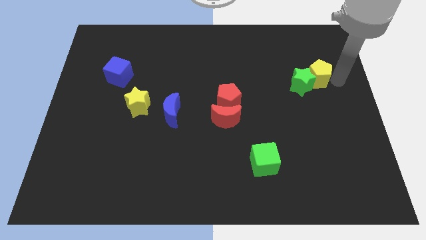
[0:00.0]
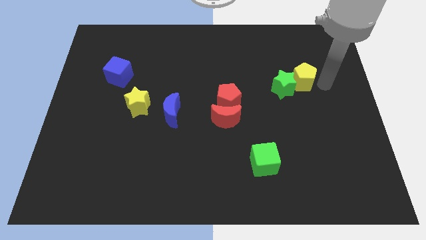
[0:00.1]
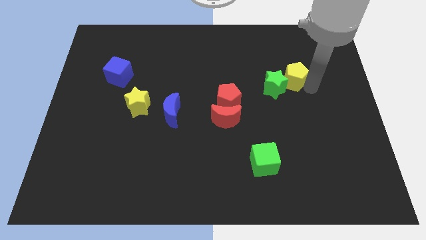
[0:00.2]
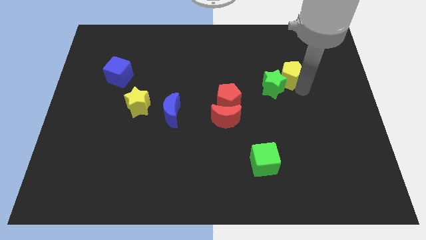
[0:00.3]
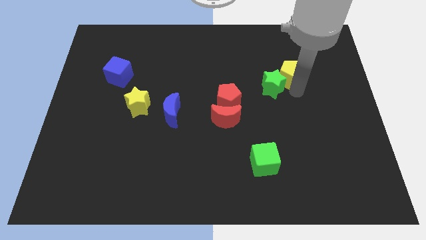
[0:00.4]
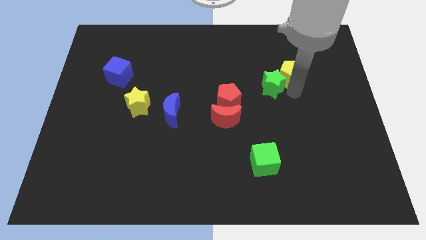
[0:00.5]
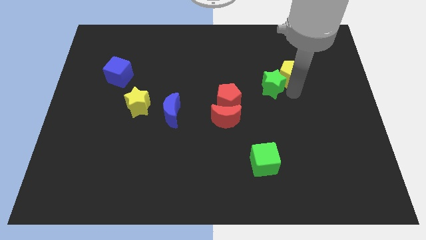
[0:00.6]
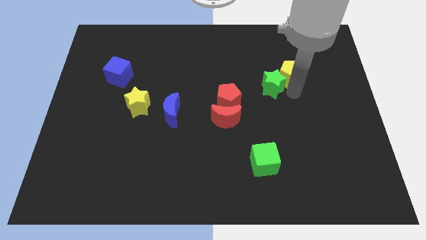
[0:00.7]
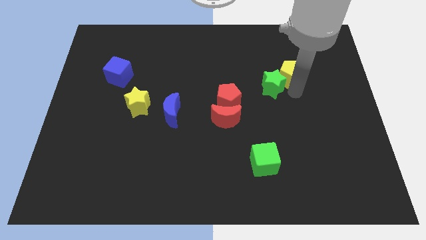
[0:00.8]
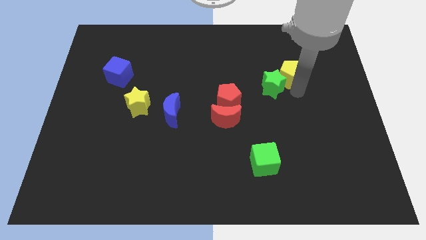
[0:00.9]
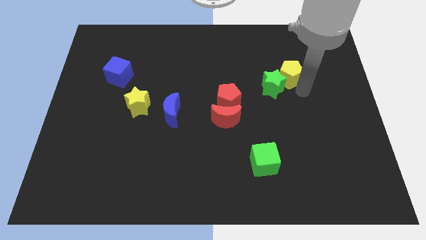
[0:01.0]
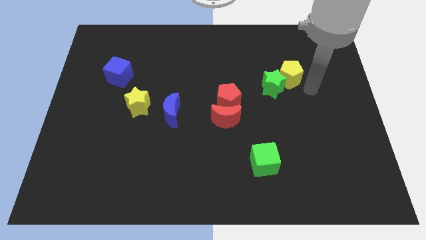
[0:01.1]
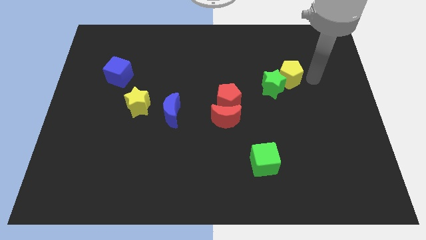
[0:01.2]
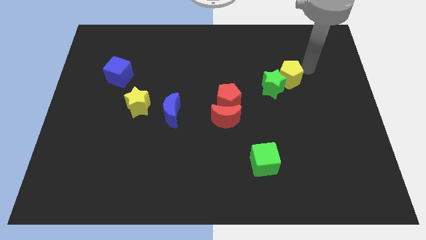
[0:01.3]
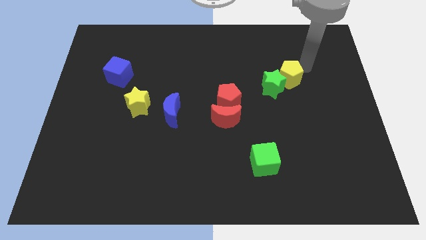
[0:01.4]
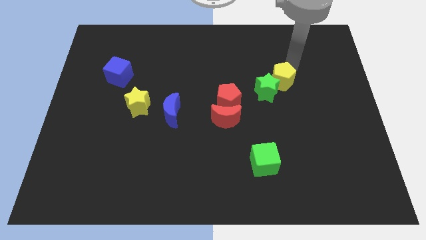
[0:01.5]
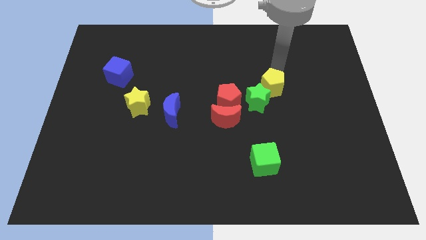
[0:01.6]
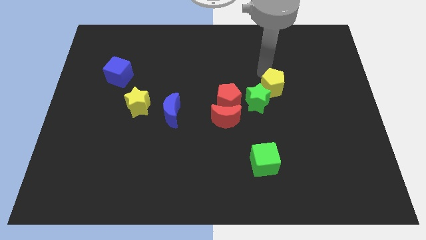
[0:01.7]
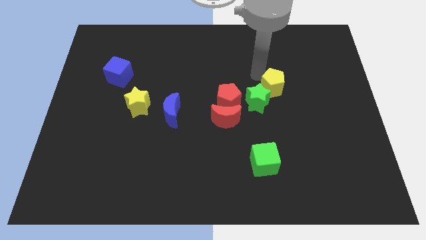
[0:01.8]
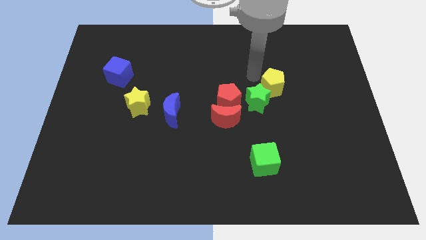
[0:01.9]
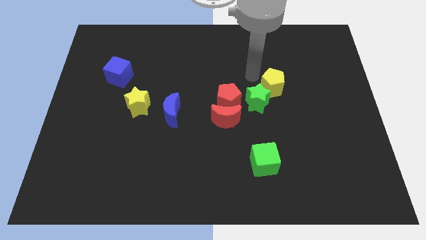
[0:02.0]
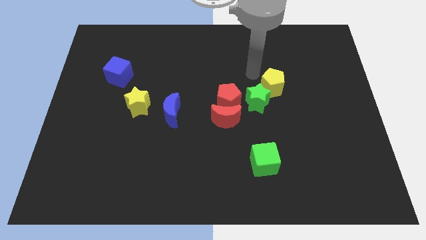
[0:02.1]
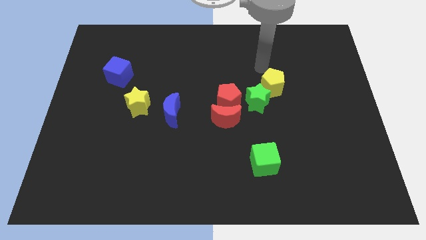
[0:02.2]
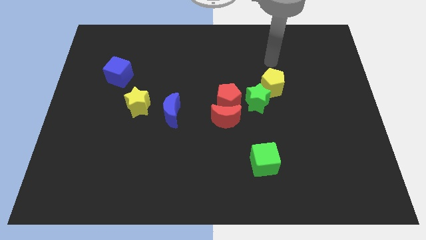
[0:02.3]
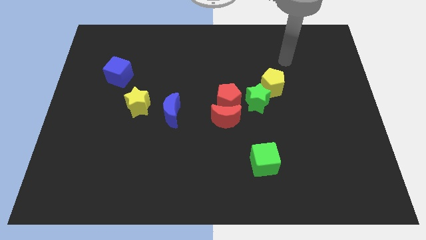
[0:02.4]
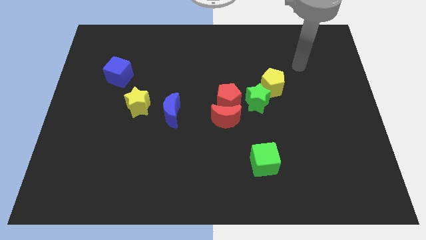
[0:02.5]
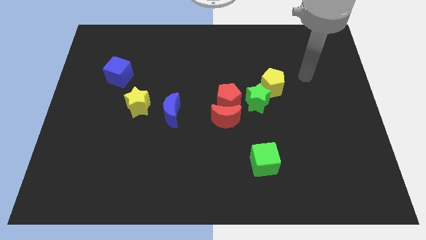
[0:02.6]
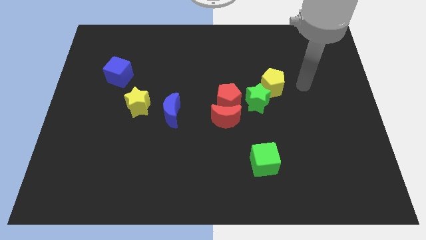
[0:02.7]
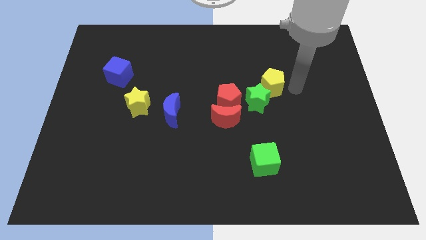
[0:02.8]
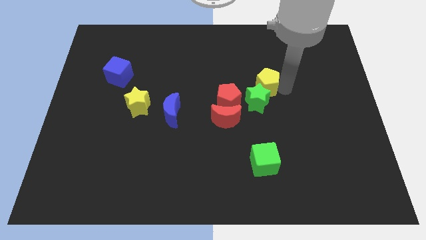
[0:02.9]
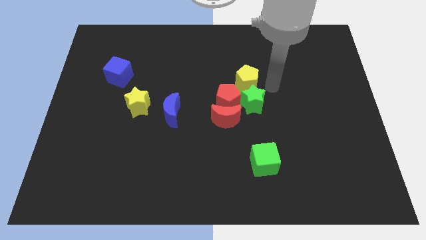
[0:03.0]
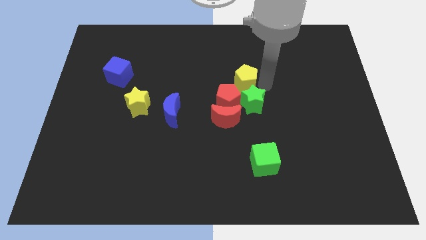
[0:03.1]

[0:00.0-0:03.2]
push the yellow pentagon and green star close to the red pentagon

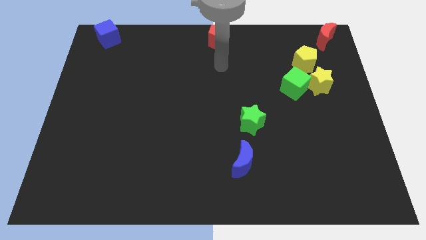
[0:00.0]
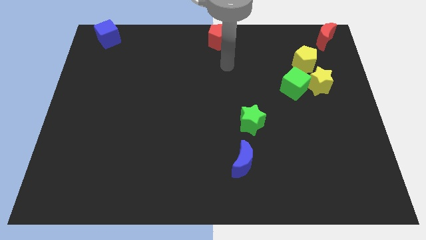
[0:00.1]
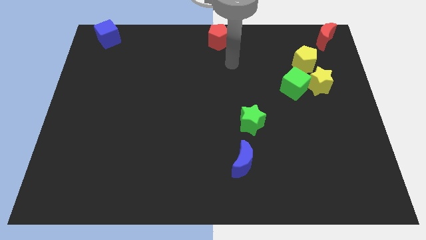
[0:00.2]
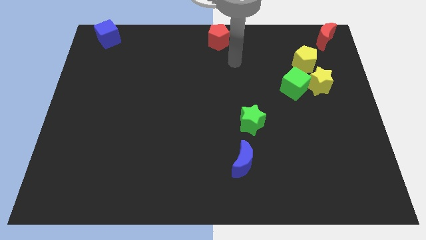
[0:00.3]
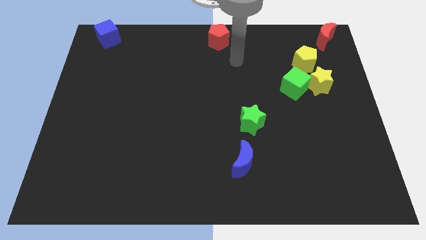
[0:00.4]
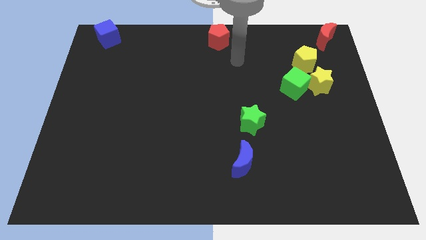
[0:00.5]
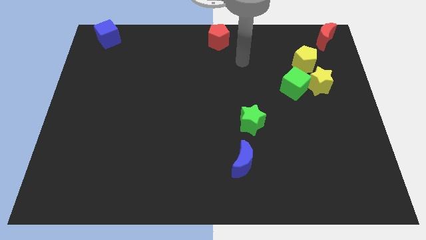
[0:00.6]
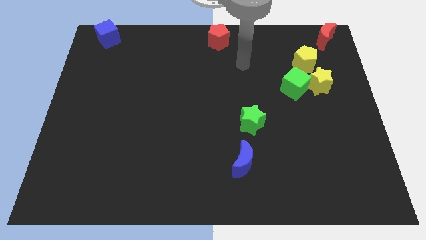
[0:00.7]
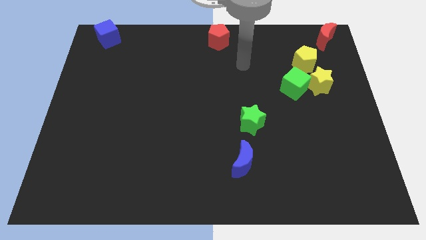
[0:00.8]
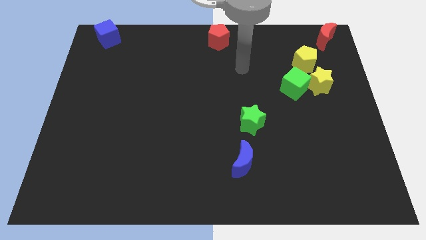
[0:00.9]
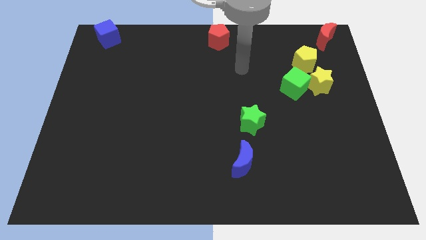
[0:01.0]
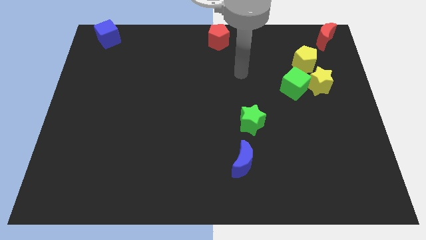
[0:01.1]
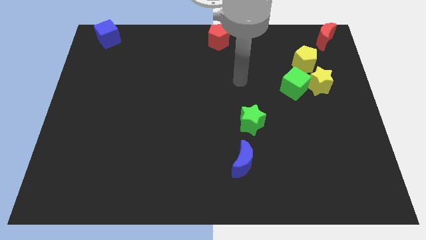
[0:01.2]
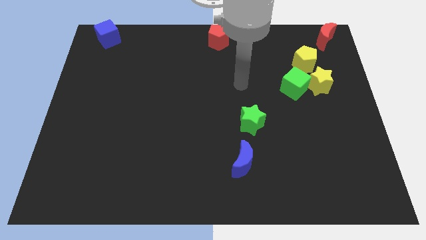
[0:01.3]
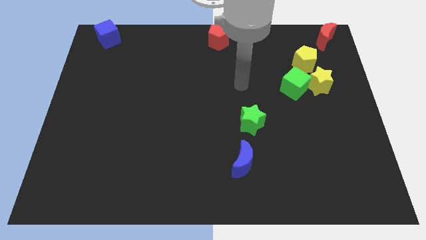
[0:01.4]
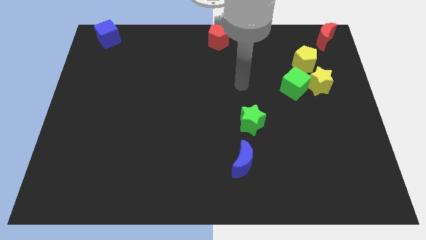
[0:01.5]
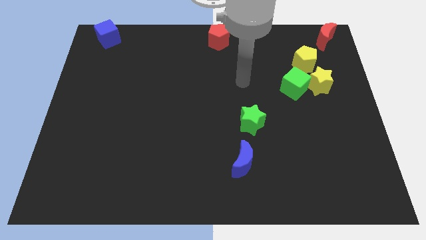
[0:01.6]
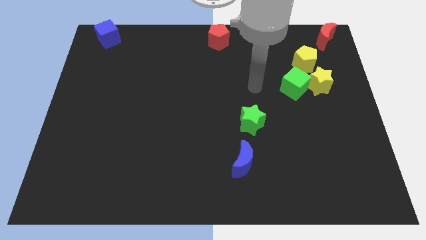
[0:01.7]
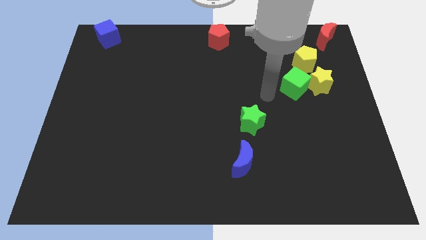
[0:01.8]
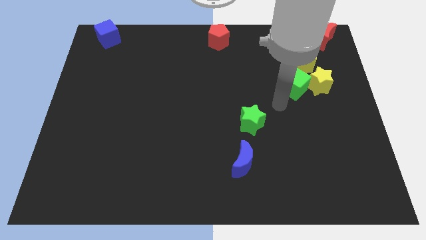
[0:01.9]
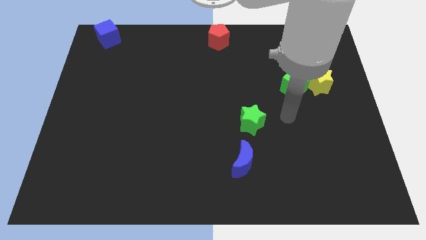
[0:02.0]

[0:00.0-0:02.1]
point your arm at the bottom of the green cube

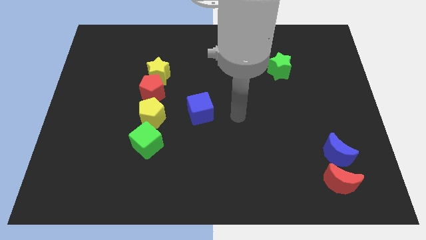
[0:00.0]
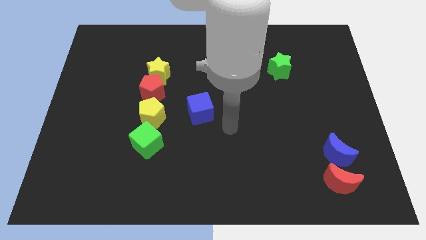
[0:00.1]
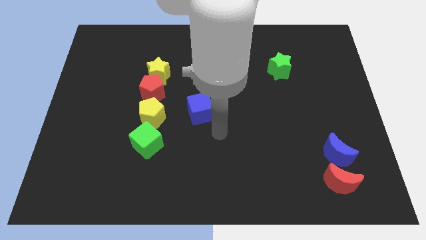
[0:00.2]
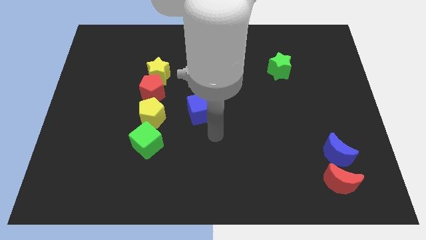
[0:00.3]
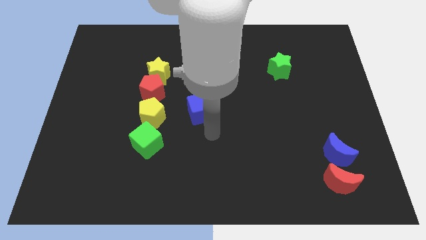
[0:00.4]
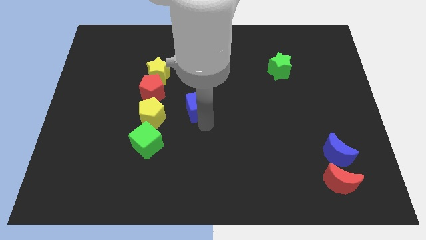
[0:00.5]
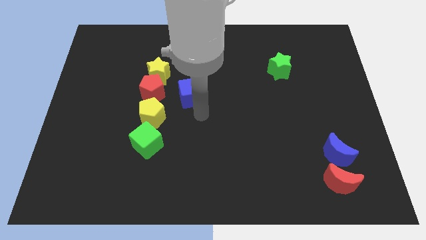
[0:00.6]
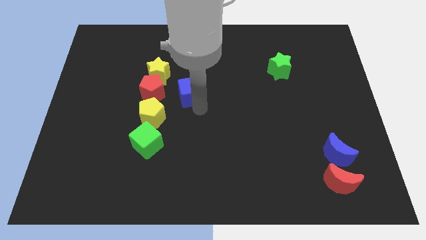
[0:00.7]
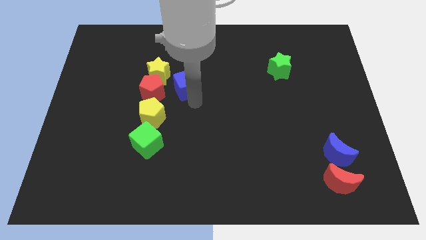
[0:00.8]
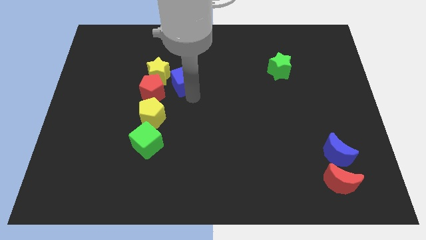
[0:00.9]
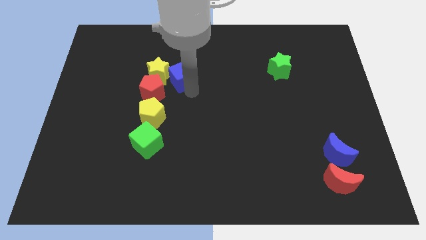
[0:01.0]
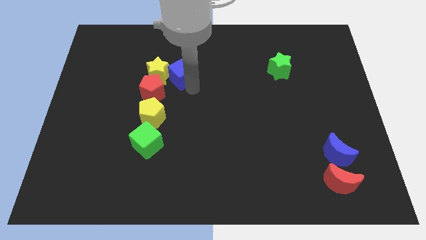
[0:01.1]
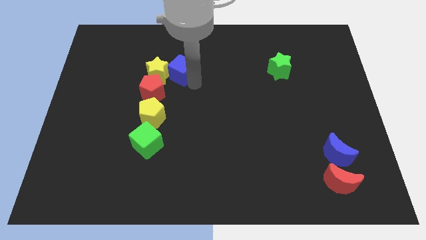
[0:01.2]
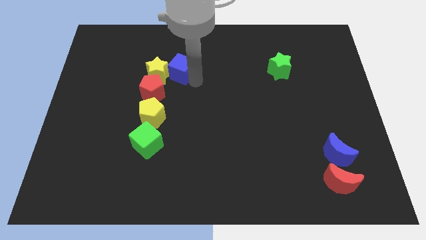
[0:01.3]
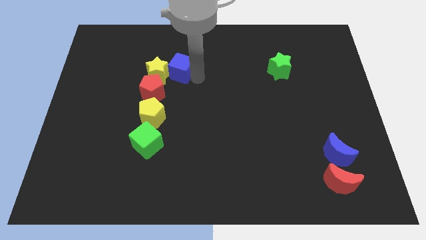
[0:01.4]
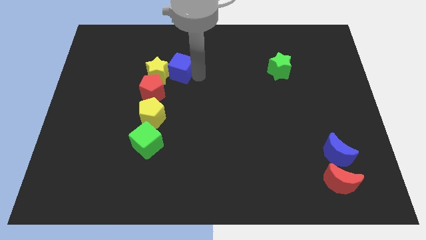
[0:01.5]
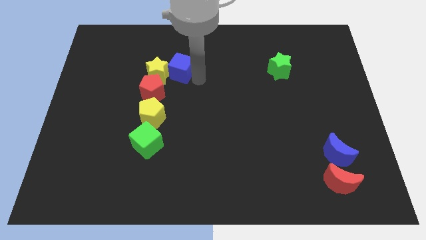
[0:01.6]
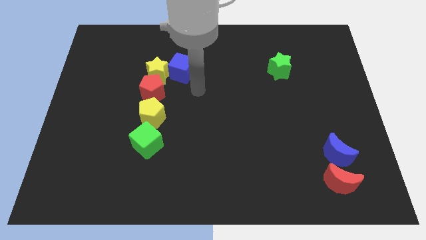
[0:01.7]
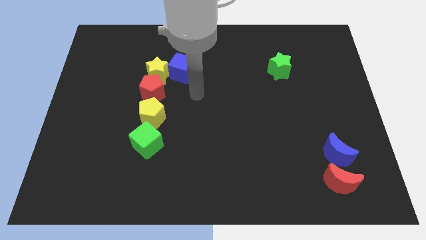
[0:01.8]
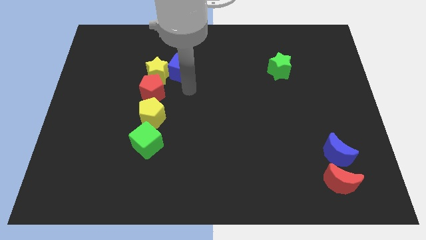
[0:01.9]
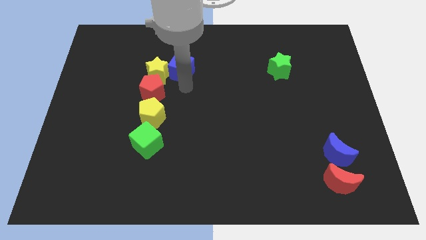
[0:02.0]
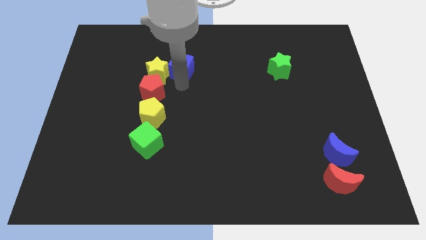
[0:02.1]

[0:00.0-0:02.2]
place the blue cube diagonally top right to the yellow star

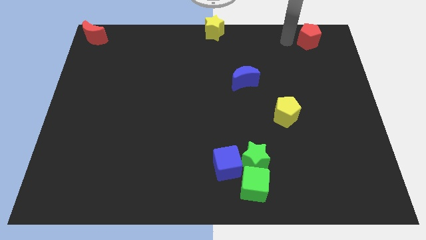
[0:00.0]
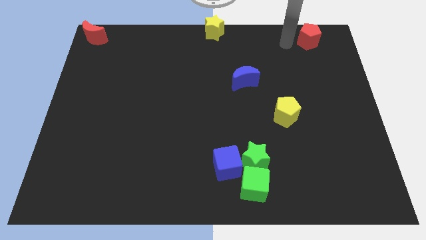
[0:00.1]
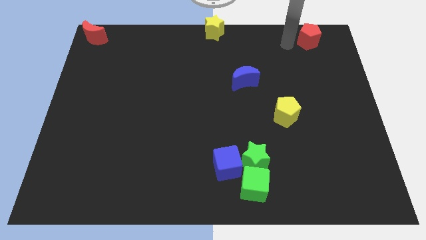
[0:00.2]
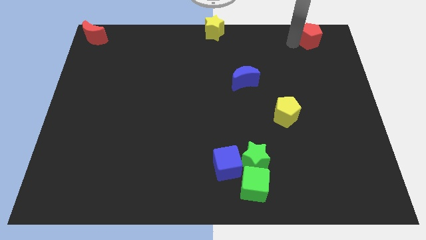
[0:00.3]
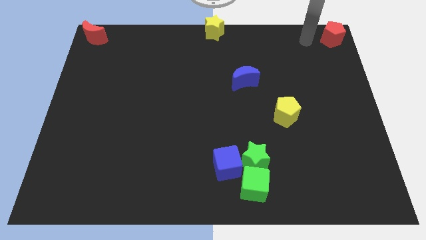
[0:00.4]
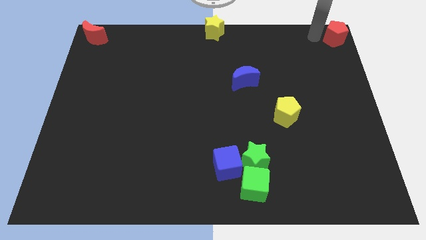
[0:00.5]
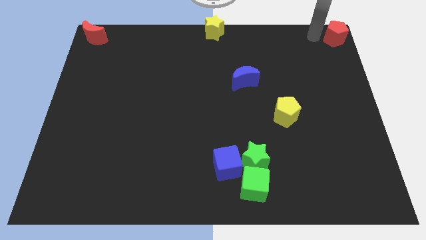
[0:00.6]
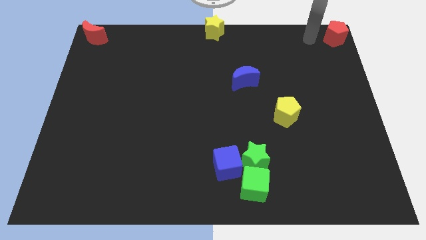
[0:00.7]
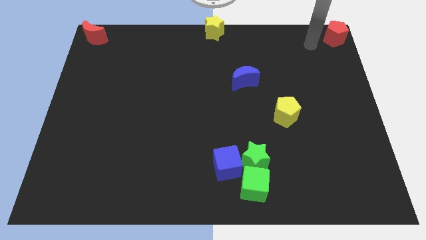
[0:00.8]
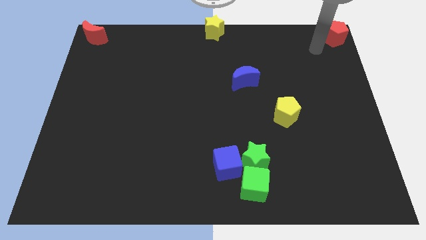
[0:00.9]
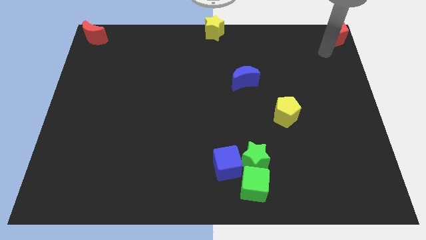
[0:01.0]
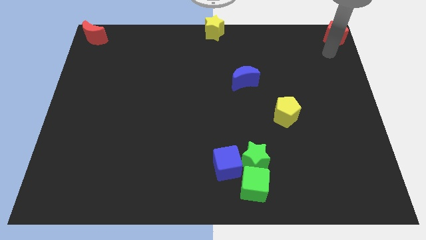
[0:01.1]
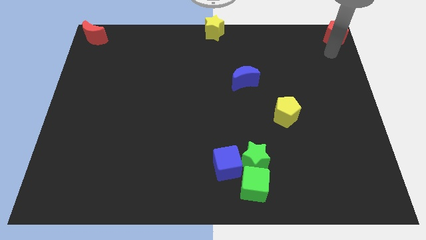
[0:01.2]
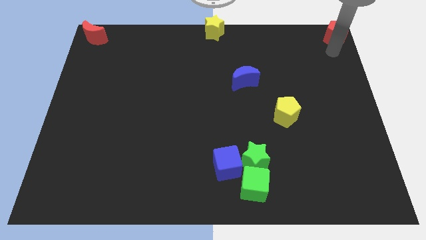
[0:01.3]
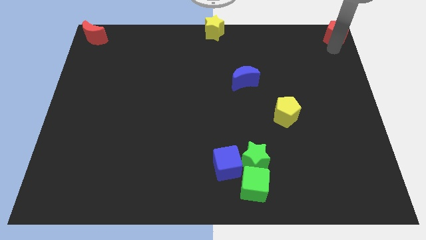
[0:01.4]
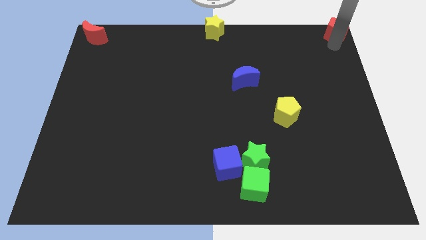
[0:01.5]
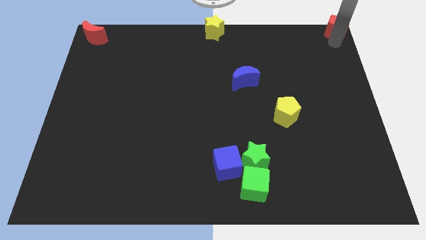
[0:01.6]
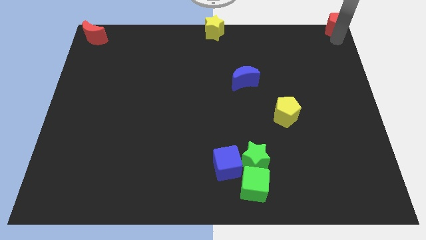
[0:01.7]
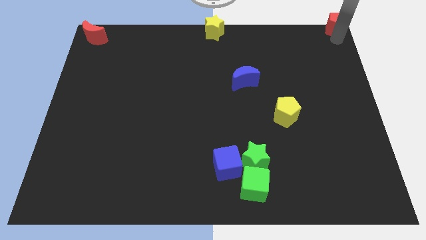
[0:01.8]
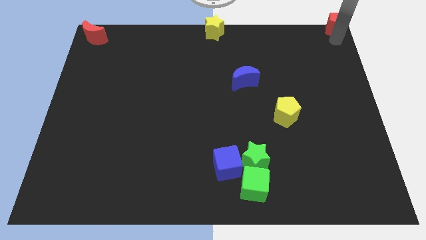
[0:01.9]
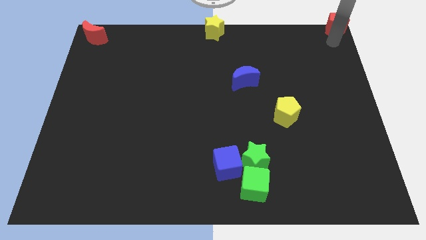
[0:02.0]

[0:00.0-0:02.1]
move red pentagon in the top right
